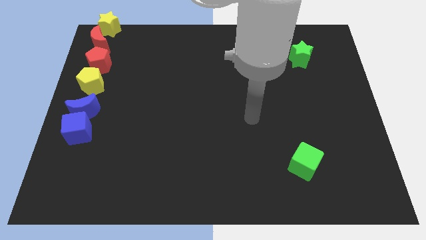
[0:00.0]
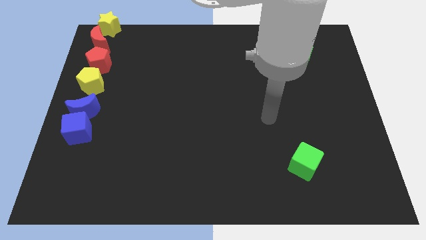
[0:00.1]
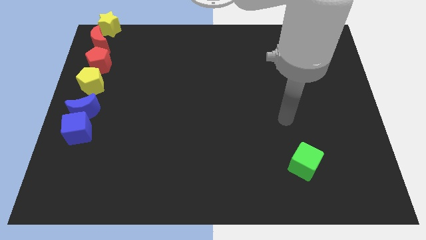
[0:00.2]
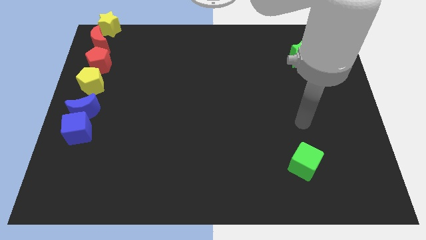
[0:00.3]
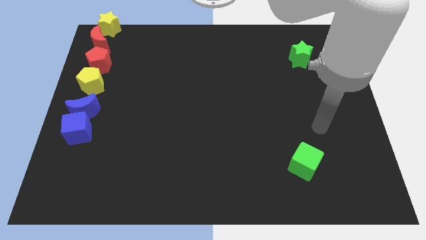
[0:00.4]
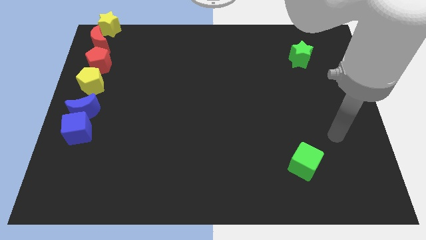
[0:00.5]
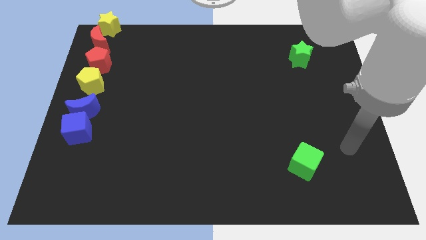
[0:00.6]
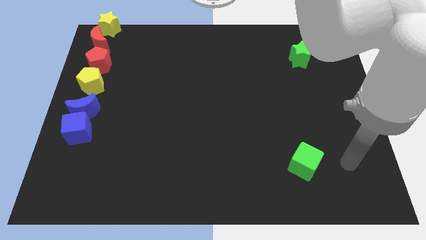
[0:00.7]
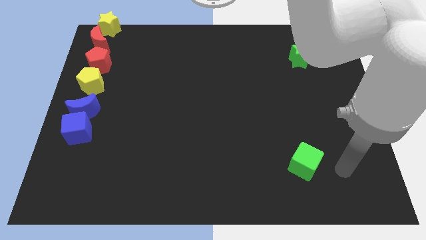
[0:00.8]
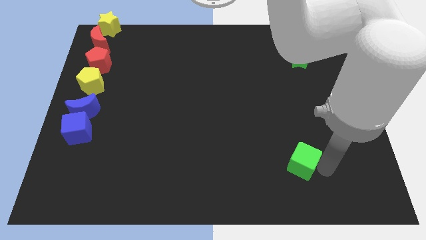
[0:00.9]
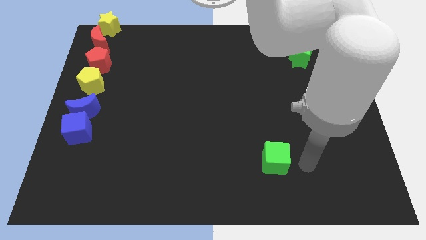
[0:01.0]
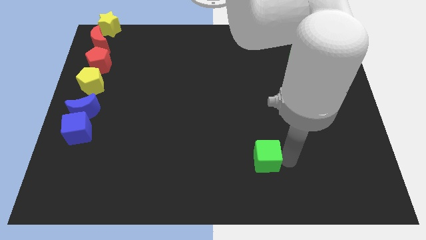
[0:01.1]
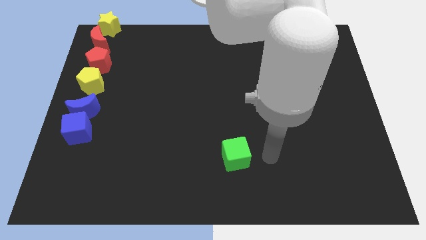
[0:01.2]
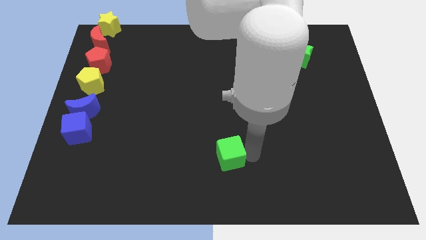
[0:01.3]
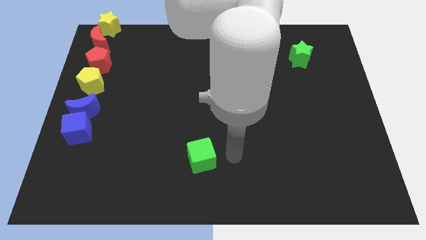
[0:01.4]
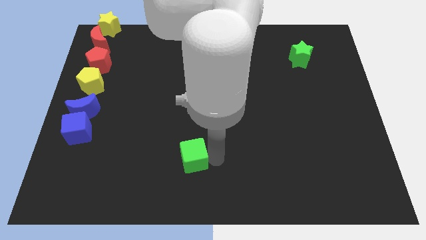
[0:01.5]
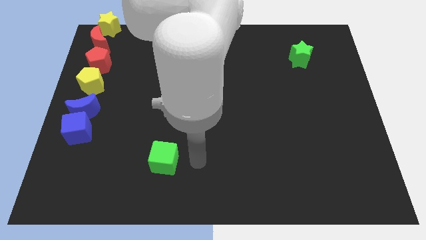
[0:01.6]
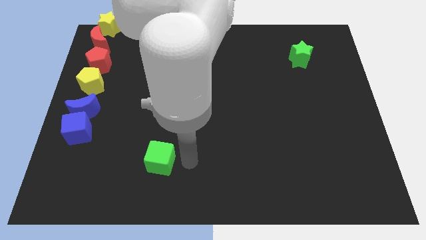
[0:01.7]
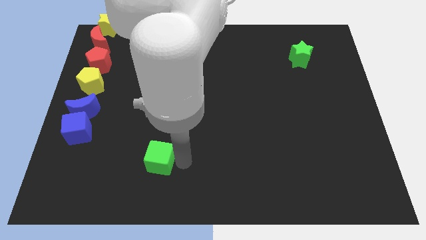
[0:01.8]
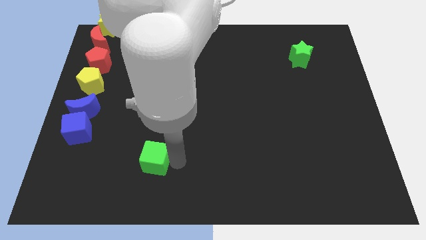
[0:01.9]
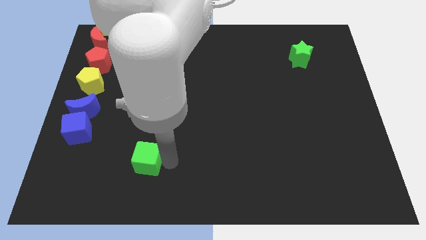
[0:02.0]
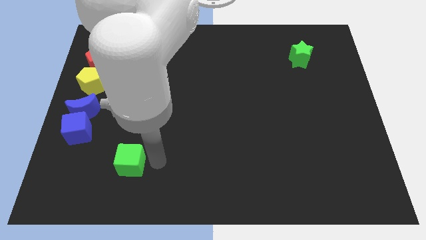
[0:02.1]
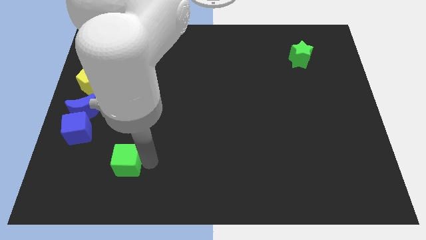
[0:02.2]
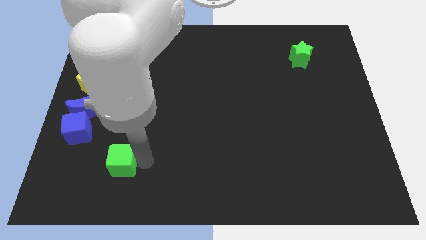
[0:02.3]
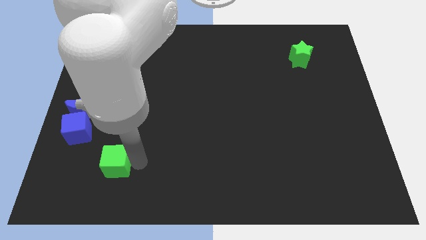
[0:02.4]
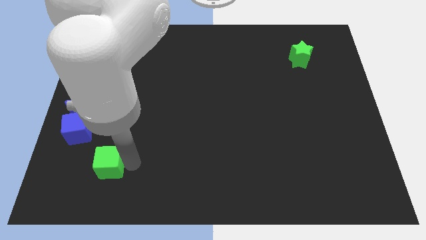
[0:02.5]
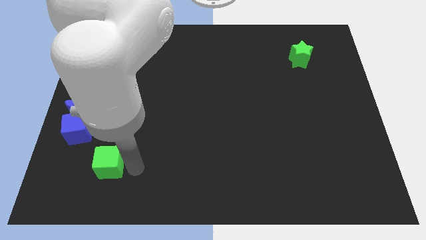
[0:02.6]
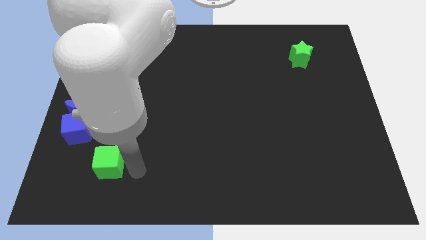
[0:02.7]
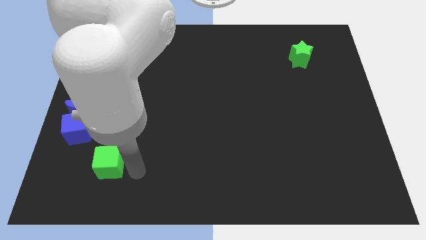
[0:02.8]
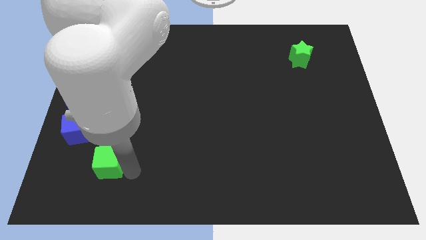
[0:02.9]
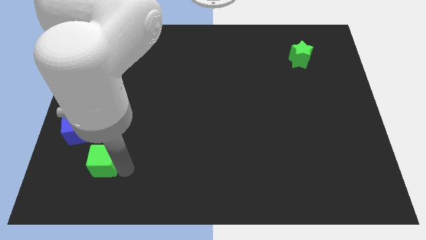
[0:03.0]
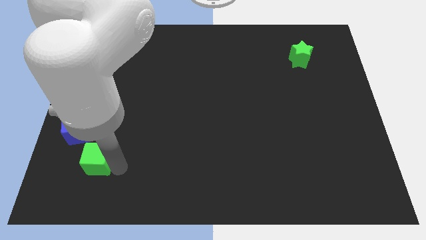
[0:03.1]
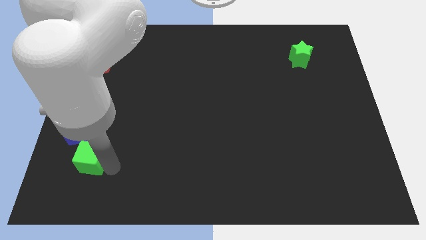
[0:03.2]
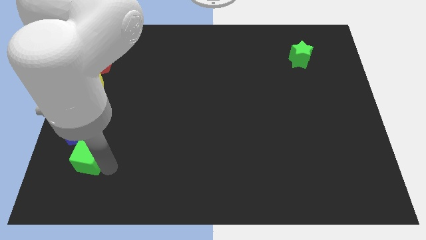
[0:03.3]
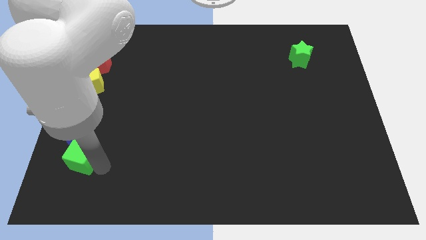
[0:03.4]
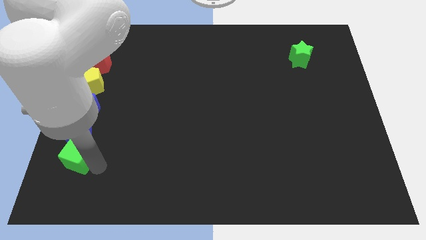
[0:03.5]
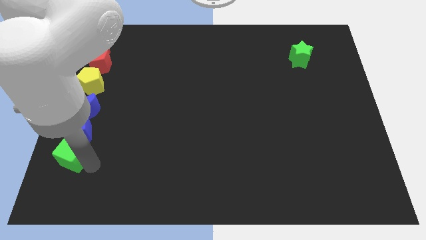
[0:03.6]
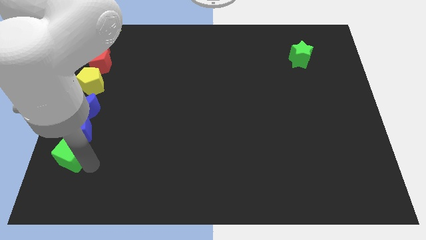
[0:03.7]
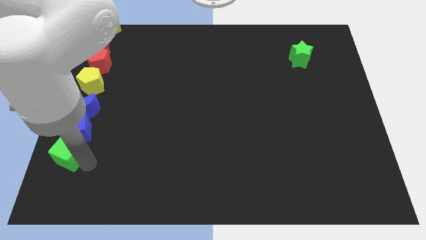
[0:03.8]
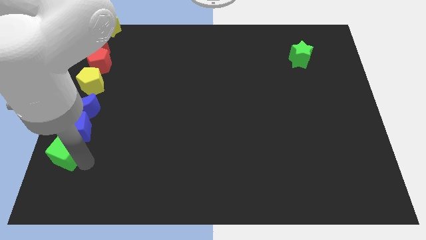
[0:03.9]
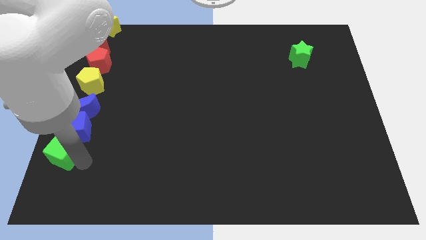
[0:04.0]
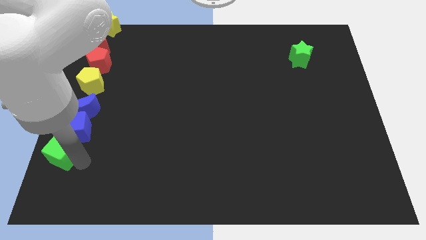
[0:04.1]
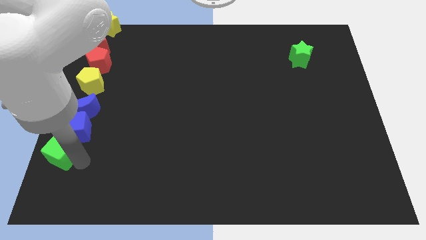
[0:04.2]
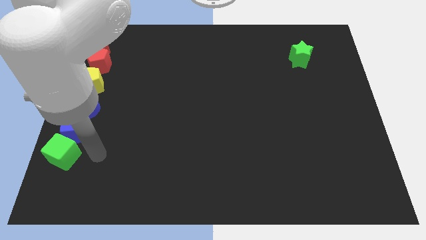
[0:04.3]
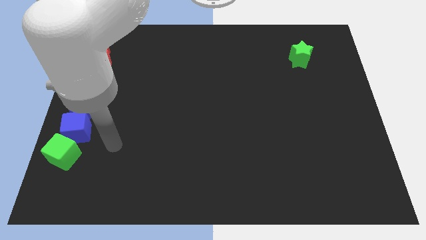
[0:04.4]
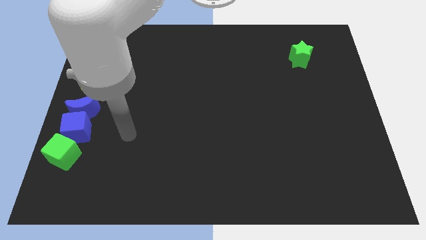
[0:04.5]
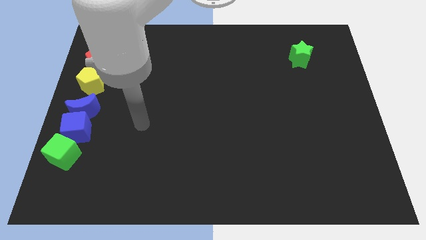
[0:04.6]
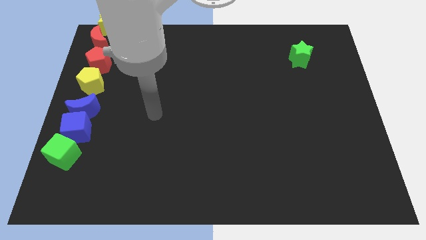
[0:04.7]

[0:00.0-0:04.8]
push the green cube into the blue cube

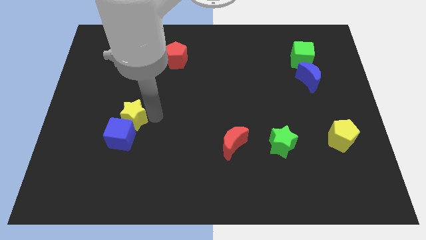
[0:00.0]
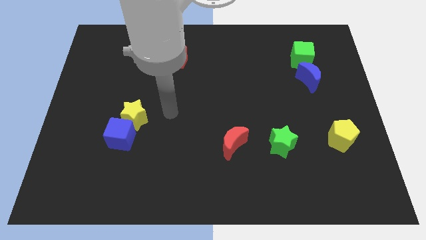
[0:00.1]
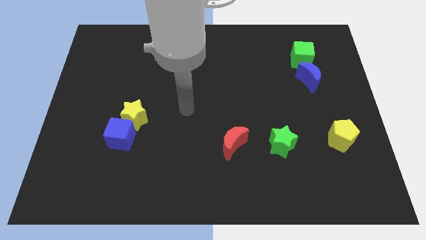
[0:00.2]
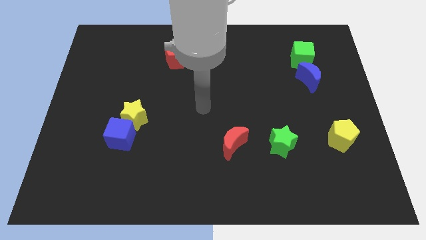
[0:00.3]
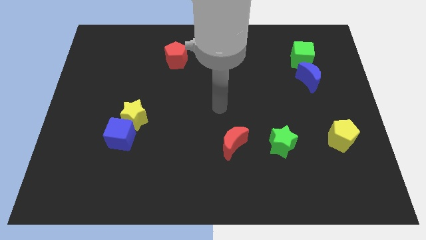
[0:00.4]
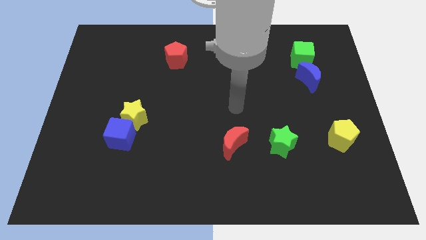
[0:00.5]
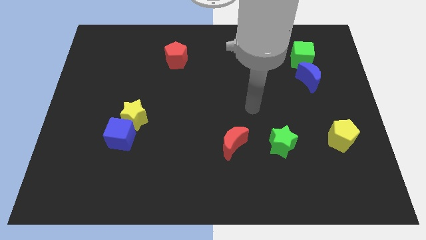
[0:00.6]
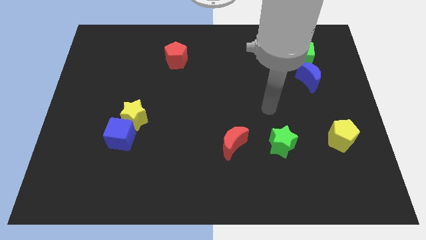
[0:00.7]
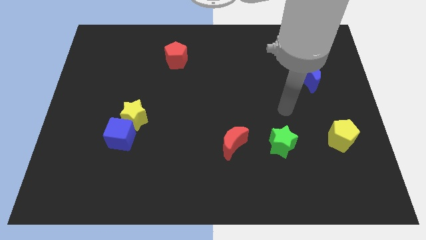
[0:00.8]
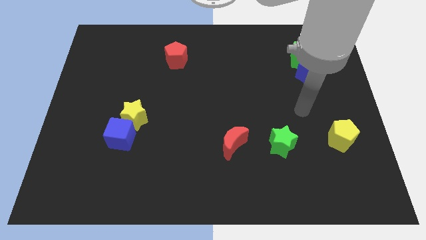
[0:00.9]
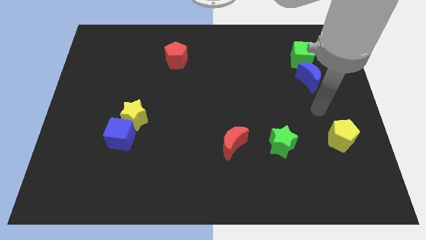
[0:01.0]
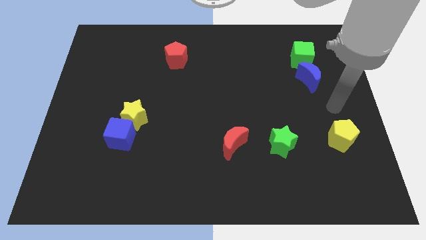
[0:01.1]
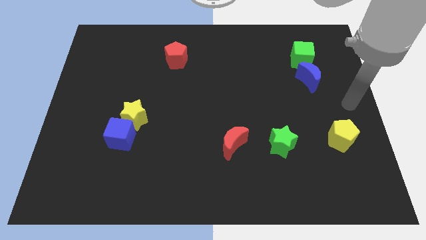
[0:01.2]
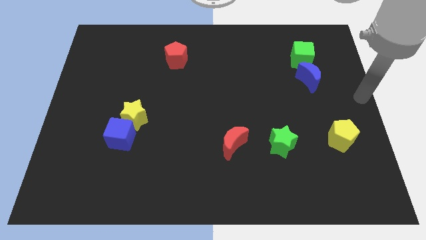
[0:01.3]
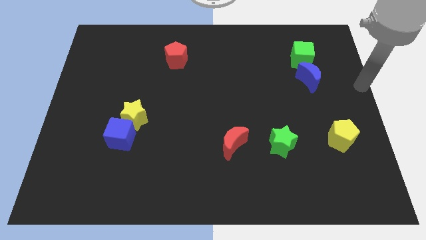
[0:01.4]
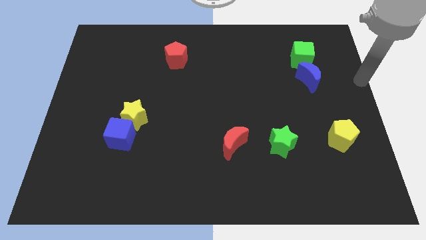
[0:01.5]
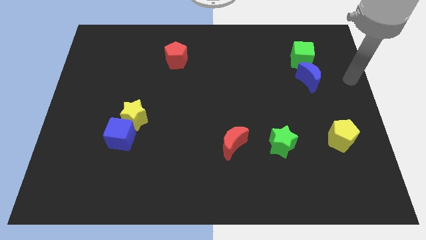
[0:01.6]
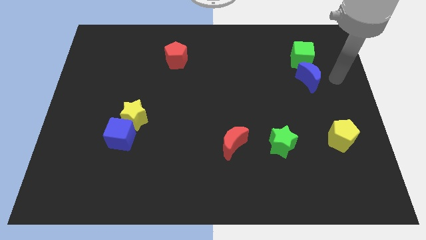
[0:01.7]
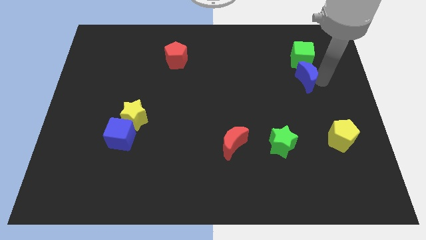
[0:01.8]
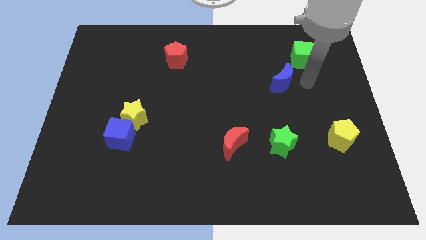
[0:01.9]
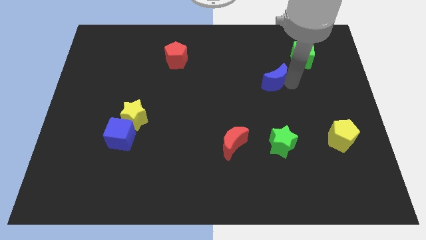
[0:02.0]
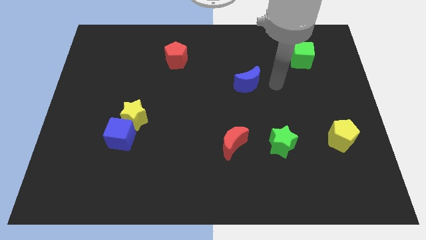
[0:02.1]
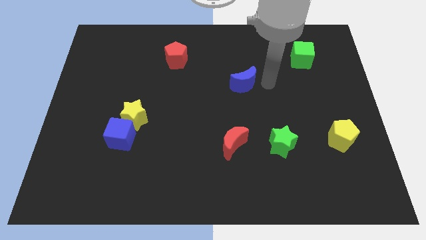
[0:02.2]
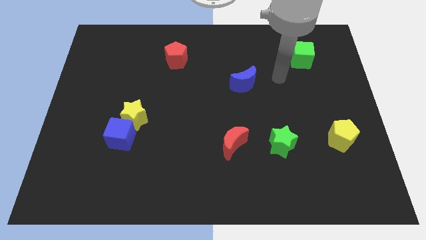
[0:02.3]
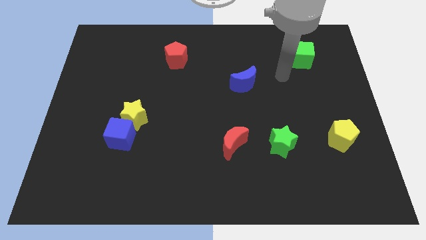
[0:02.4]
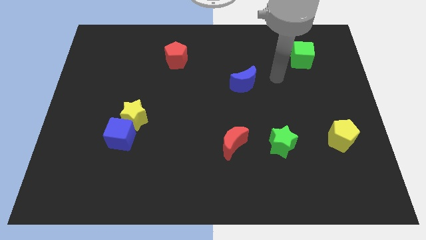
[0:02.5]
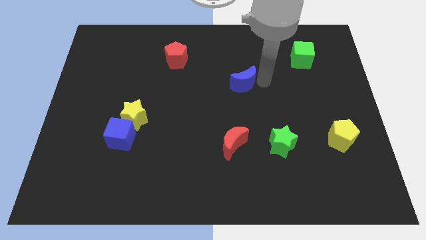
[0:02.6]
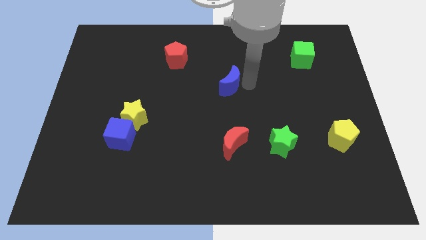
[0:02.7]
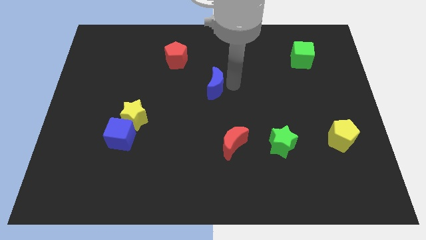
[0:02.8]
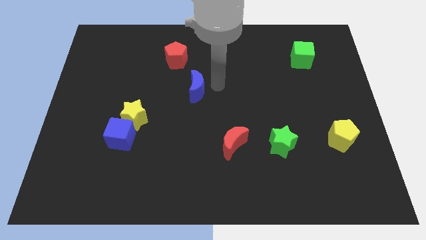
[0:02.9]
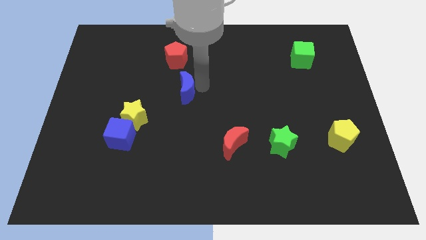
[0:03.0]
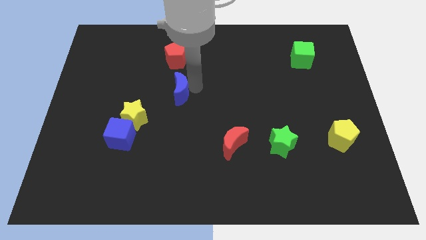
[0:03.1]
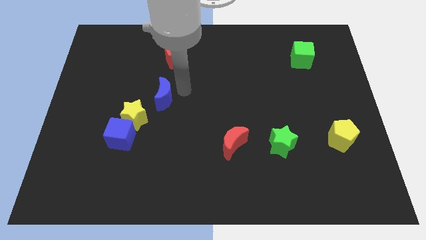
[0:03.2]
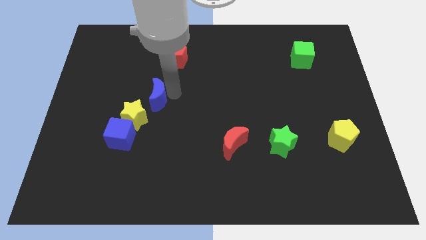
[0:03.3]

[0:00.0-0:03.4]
move the blue crescent towards the top of the yellow star

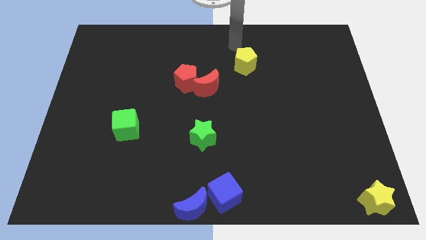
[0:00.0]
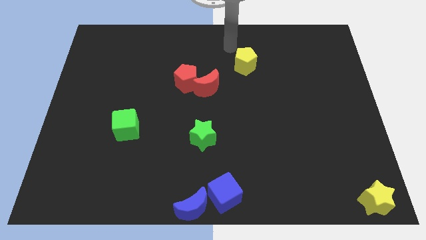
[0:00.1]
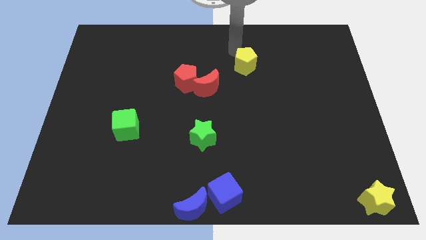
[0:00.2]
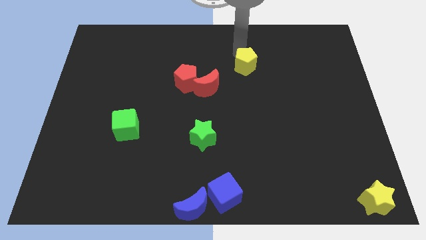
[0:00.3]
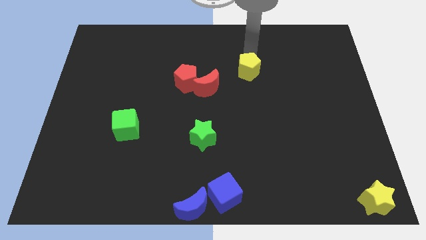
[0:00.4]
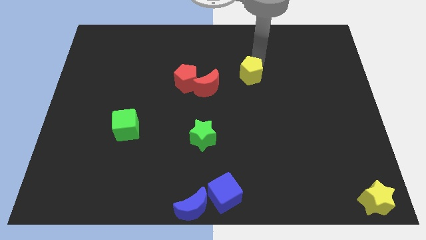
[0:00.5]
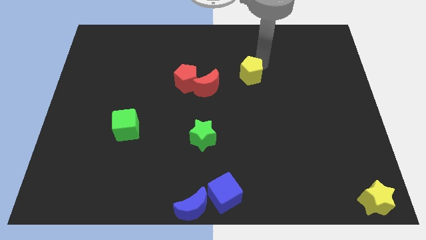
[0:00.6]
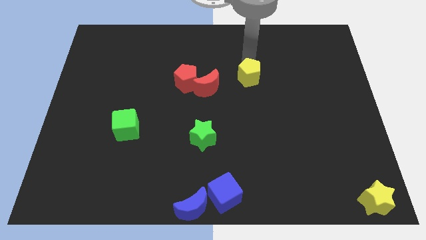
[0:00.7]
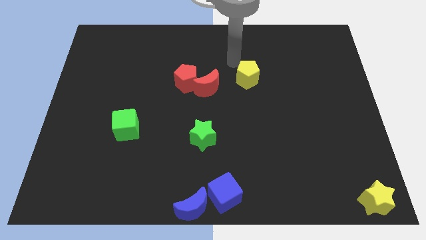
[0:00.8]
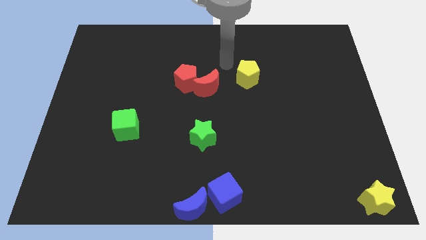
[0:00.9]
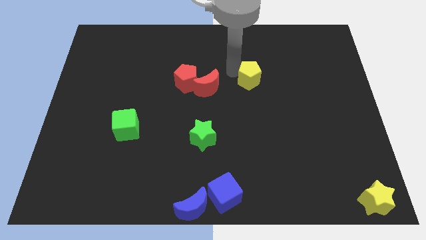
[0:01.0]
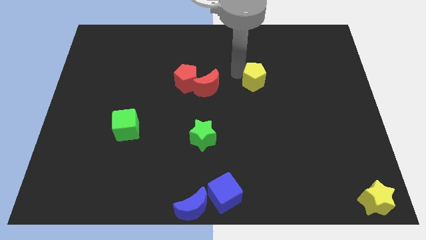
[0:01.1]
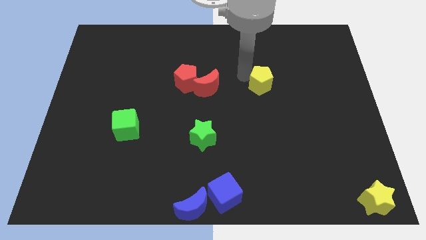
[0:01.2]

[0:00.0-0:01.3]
place yellow pentagon parallel to red moon
